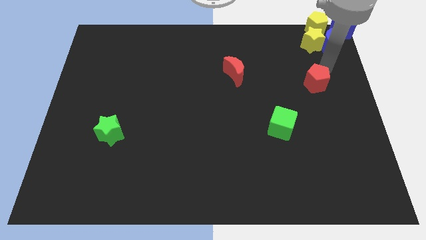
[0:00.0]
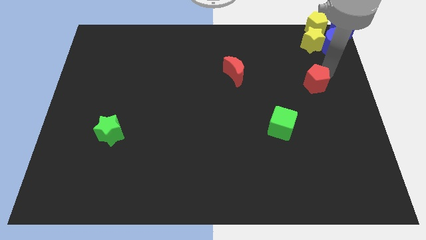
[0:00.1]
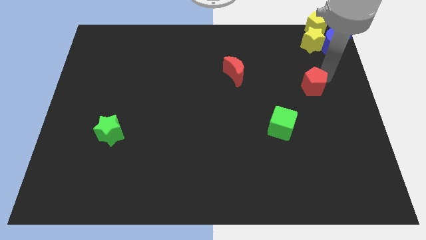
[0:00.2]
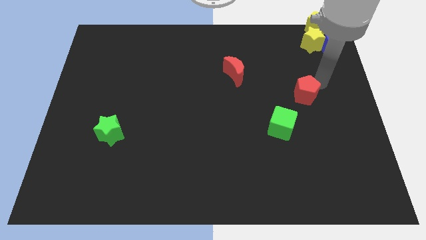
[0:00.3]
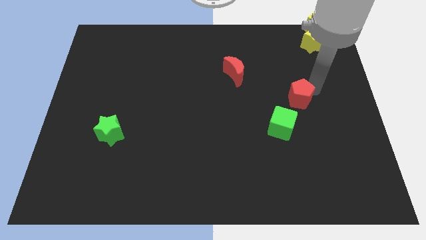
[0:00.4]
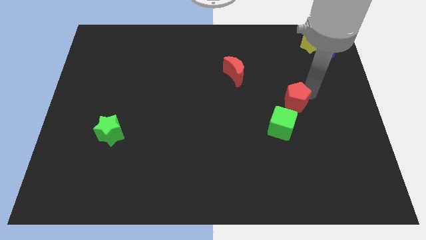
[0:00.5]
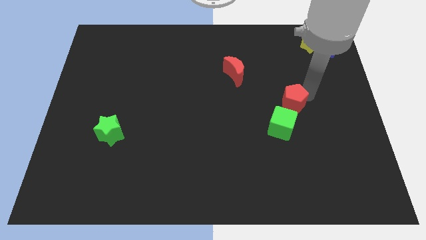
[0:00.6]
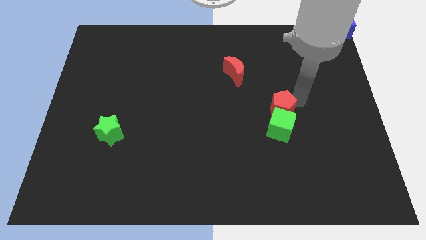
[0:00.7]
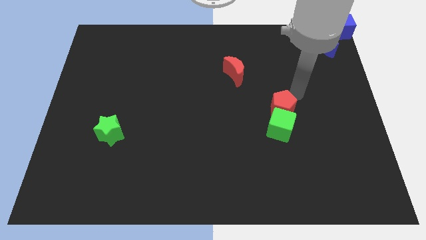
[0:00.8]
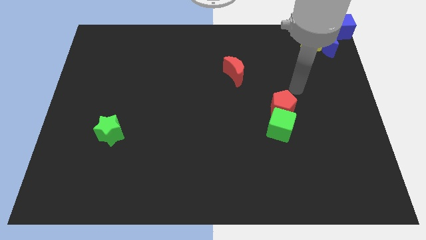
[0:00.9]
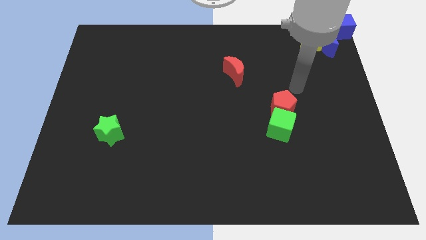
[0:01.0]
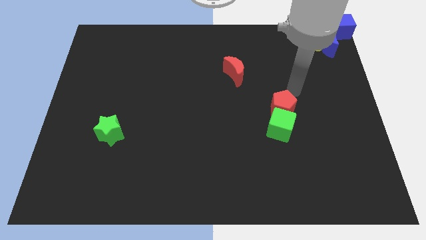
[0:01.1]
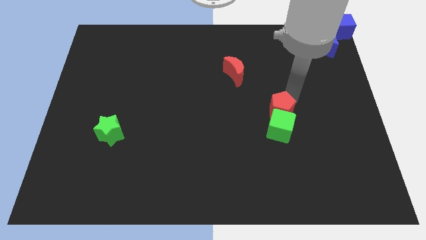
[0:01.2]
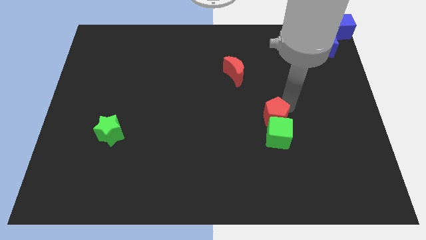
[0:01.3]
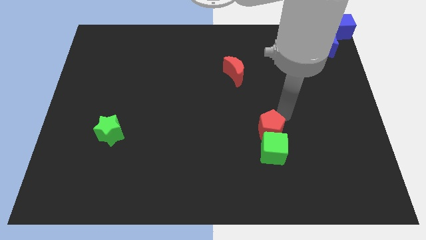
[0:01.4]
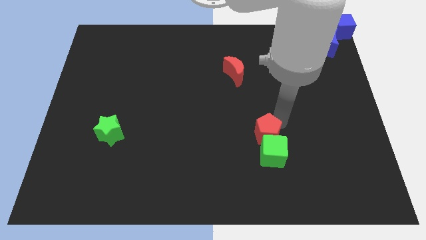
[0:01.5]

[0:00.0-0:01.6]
place the red pentagon into the green cube

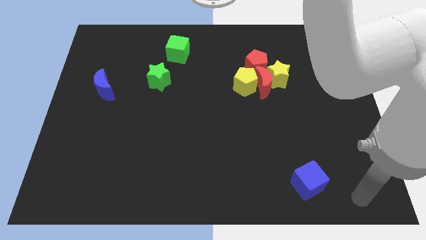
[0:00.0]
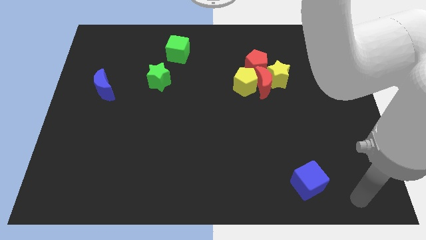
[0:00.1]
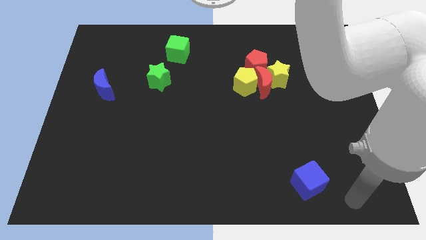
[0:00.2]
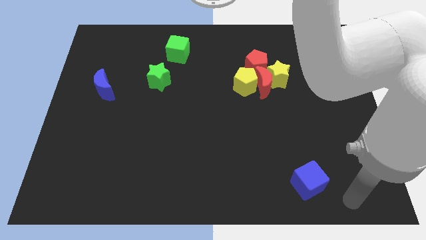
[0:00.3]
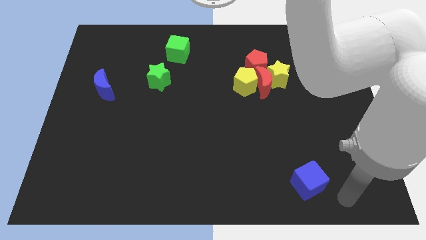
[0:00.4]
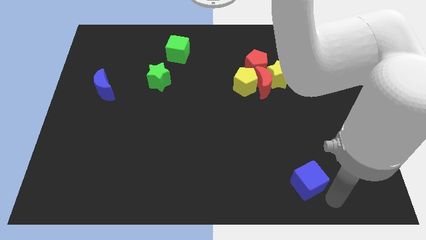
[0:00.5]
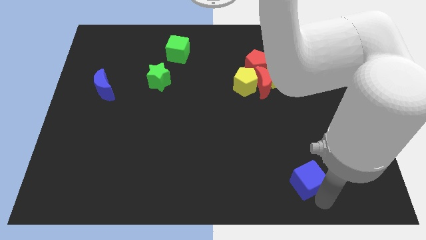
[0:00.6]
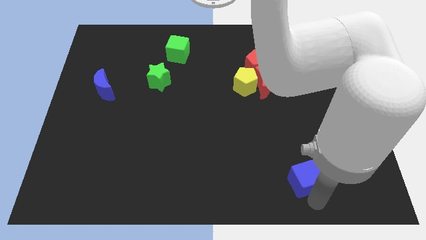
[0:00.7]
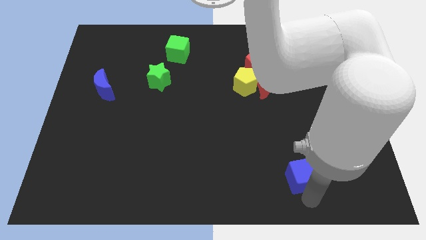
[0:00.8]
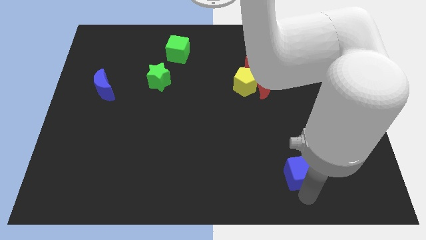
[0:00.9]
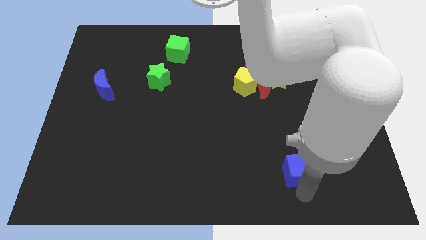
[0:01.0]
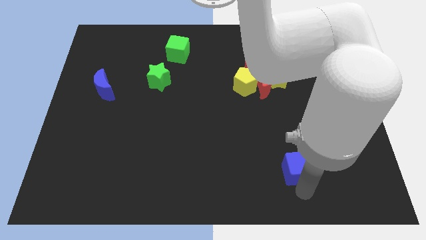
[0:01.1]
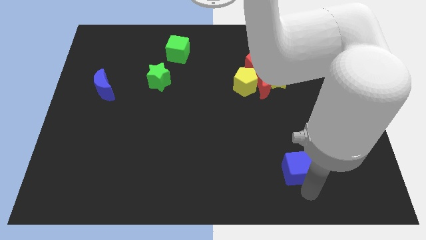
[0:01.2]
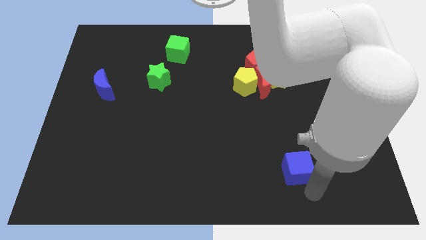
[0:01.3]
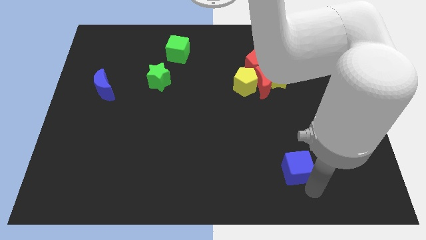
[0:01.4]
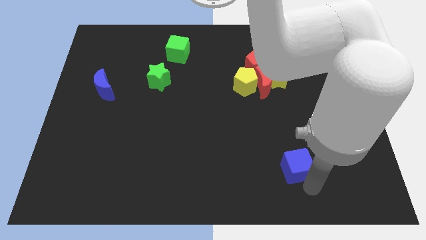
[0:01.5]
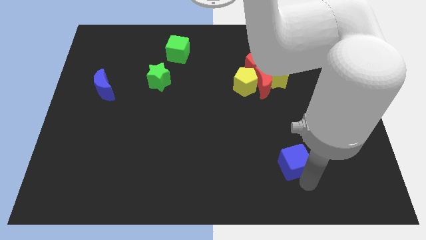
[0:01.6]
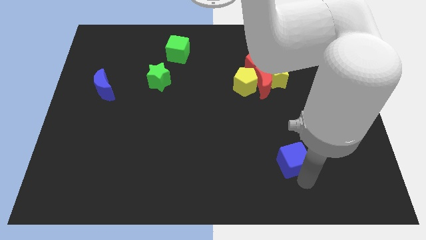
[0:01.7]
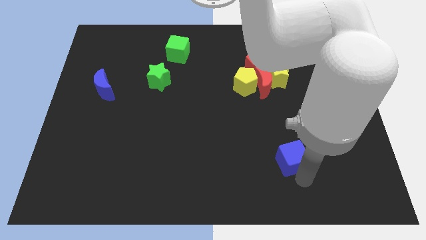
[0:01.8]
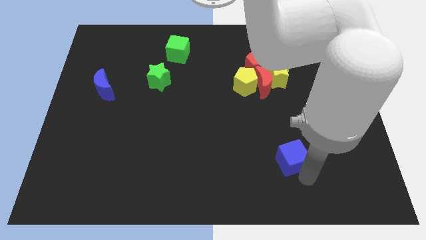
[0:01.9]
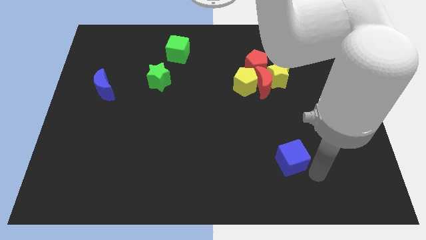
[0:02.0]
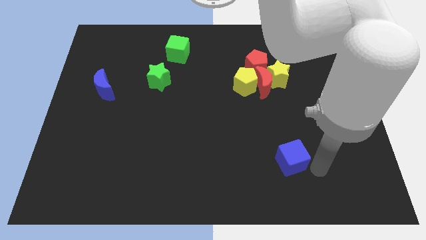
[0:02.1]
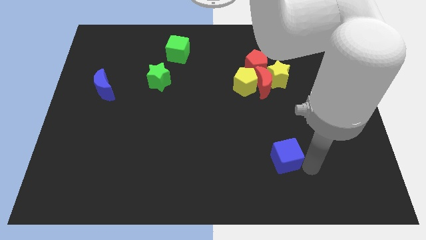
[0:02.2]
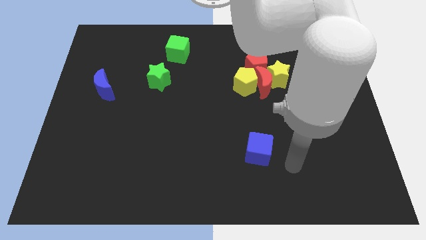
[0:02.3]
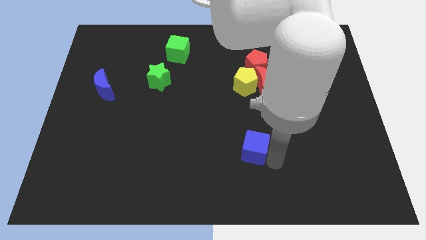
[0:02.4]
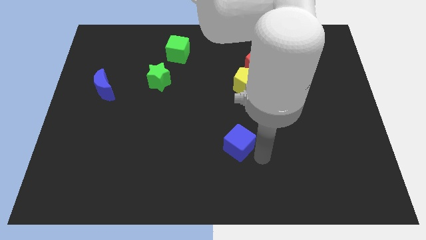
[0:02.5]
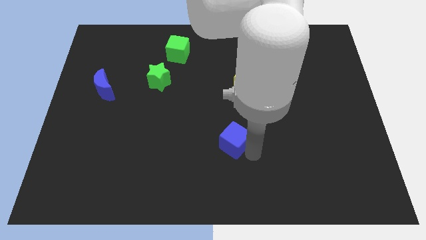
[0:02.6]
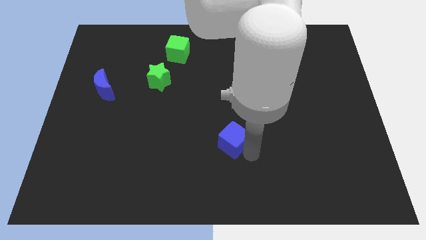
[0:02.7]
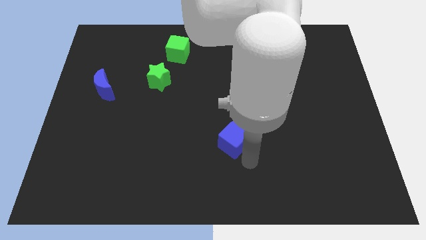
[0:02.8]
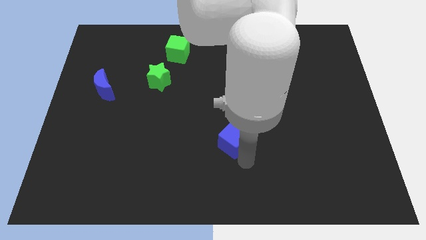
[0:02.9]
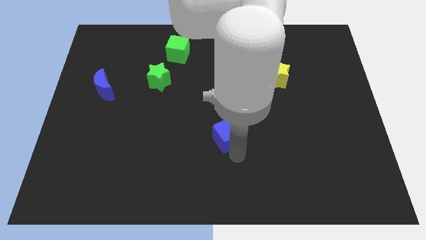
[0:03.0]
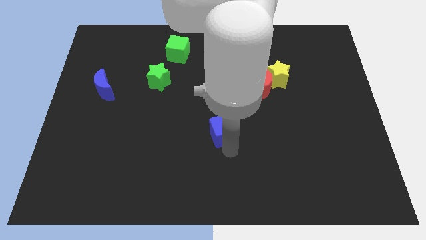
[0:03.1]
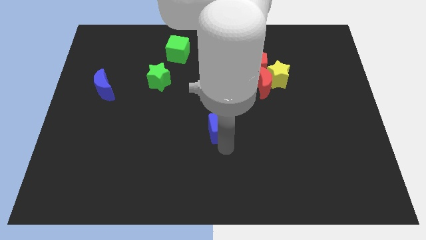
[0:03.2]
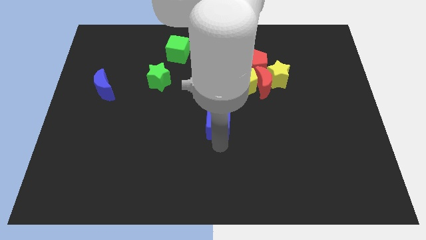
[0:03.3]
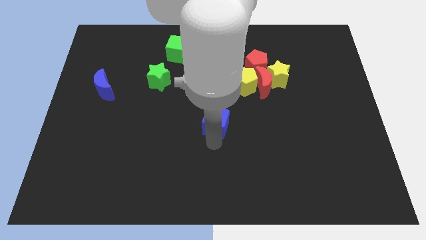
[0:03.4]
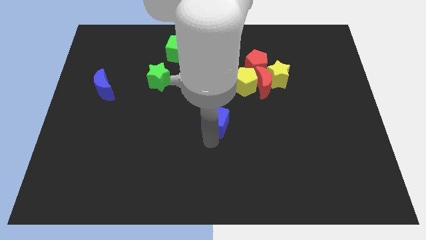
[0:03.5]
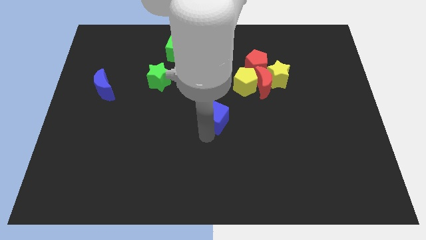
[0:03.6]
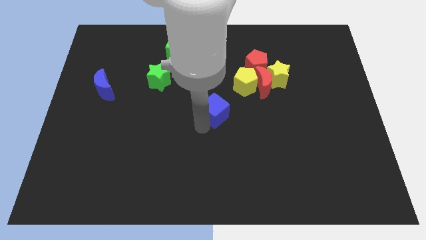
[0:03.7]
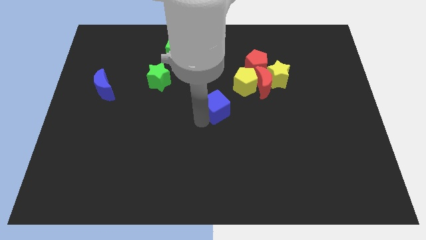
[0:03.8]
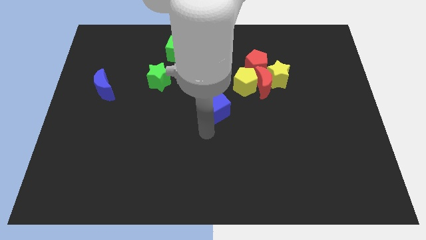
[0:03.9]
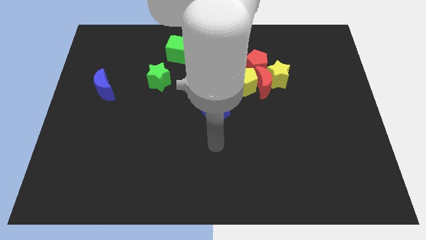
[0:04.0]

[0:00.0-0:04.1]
push the blue cube towards the center of the board

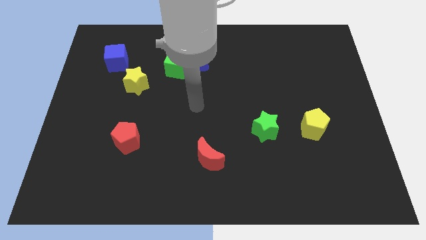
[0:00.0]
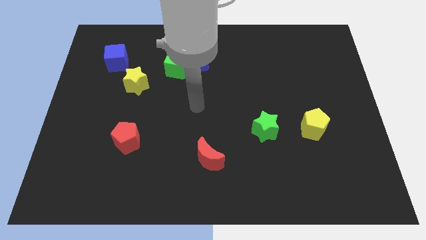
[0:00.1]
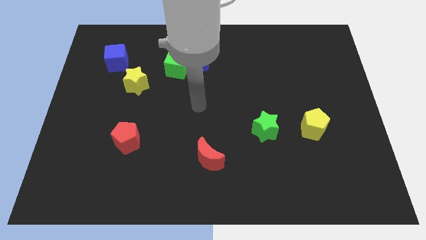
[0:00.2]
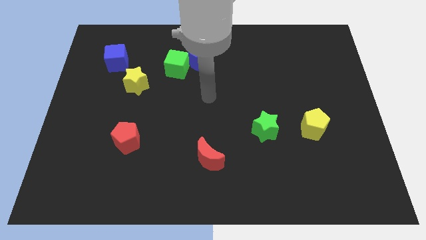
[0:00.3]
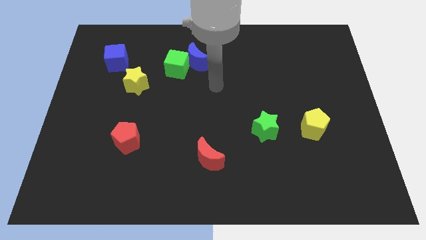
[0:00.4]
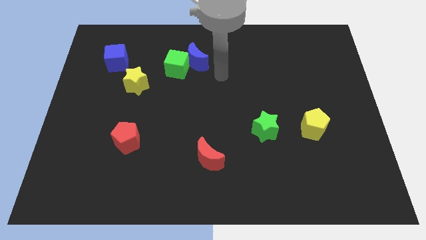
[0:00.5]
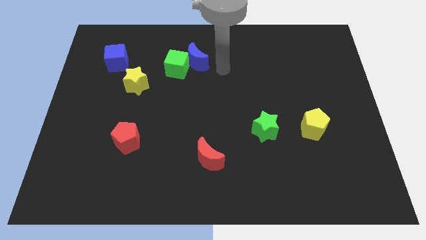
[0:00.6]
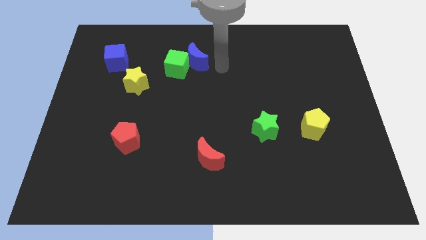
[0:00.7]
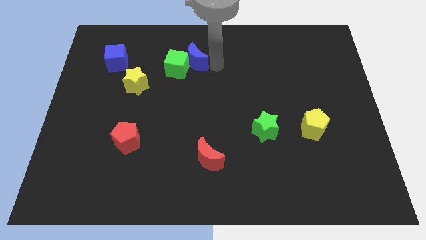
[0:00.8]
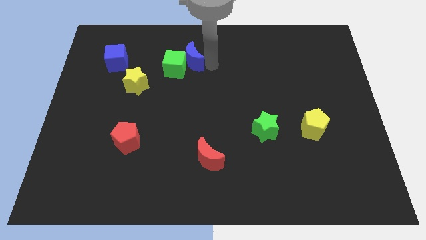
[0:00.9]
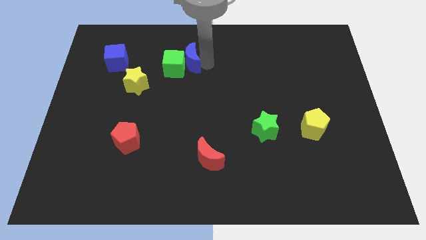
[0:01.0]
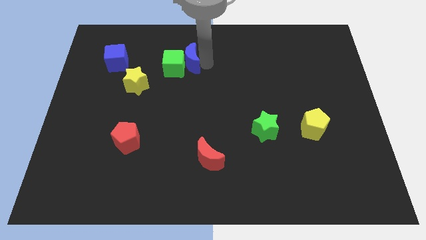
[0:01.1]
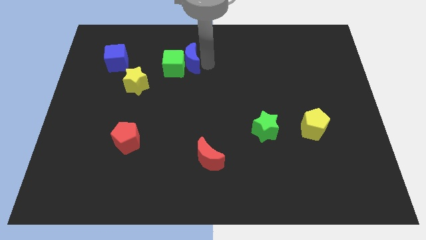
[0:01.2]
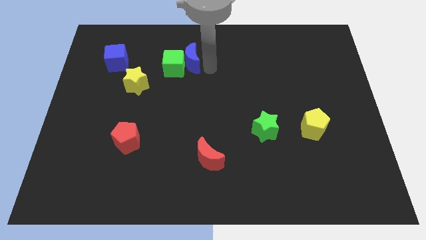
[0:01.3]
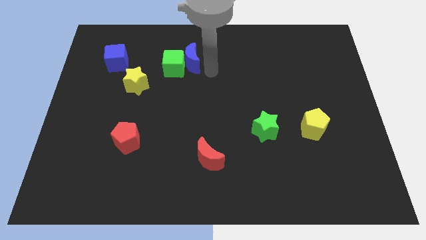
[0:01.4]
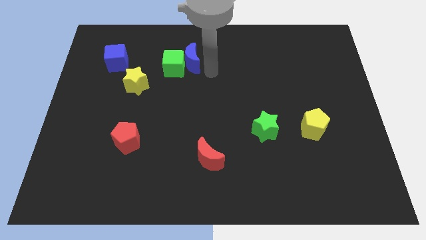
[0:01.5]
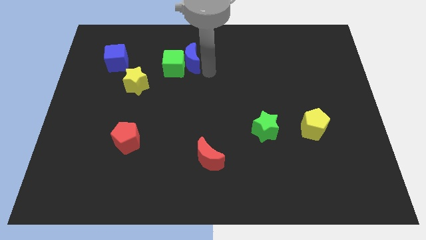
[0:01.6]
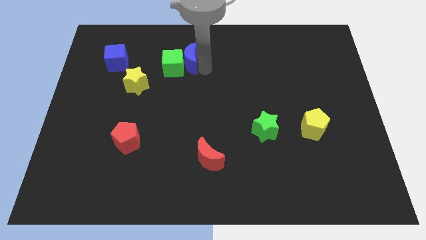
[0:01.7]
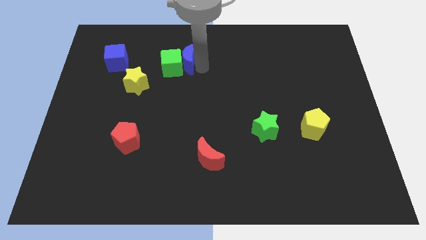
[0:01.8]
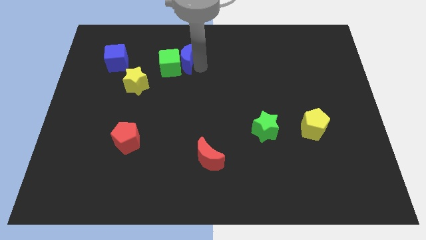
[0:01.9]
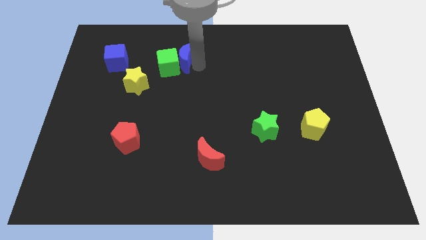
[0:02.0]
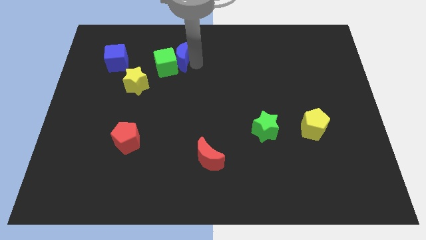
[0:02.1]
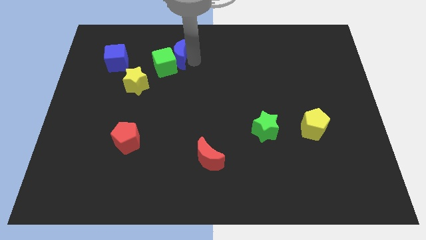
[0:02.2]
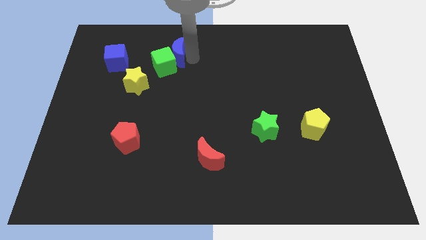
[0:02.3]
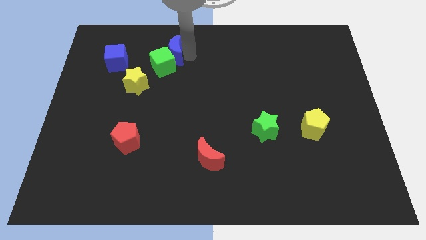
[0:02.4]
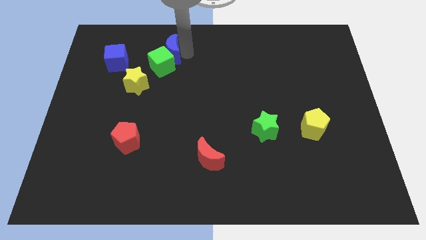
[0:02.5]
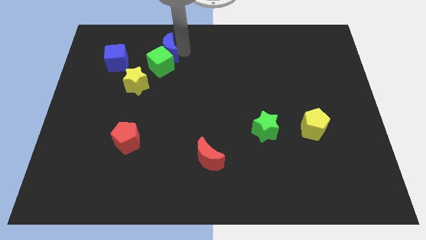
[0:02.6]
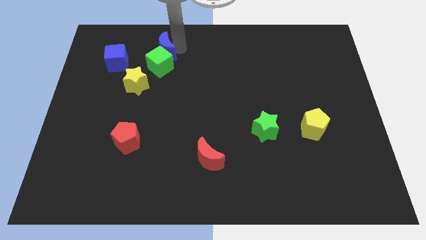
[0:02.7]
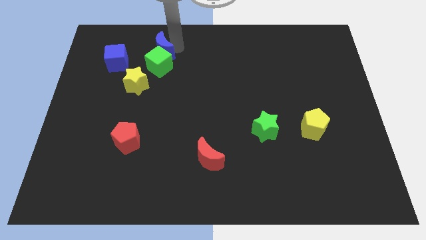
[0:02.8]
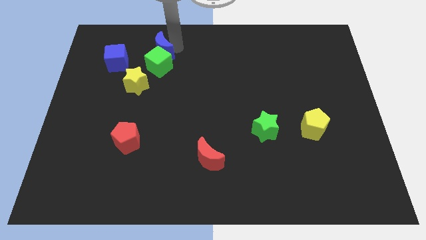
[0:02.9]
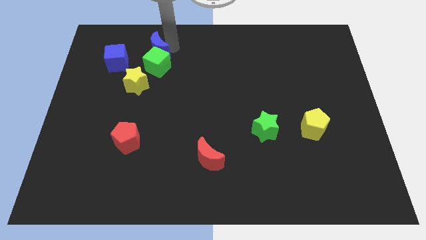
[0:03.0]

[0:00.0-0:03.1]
slightly move the blue moon towards the left

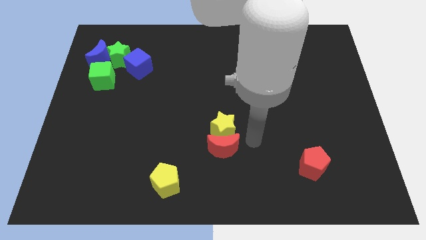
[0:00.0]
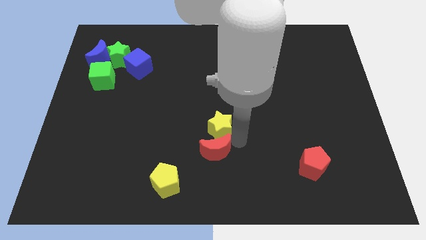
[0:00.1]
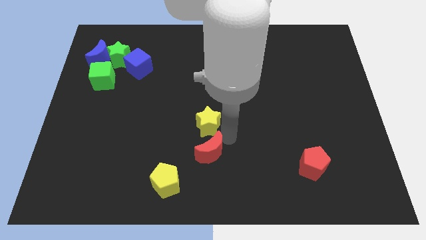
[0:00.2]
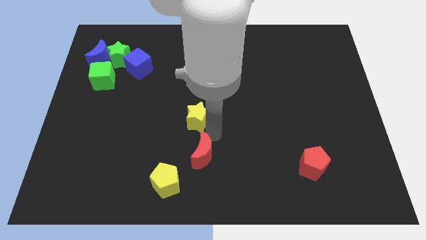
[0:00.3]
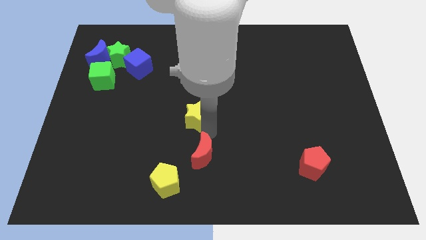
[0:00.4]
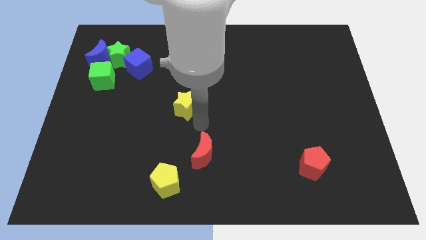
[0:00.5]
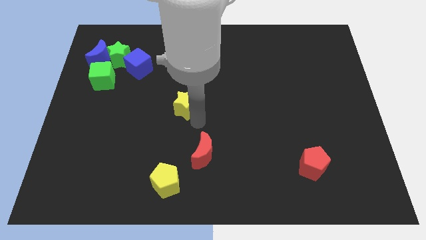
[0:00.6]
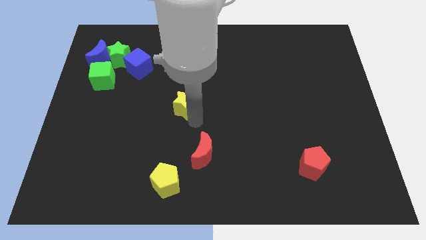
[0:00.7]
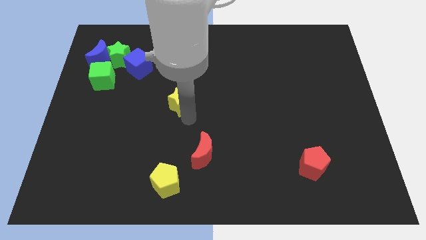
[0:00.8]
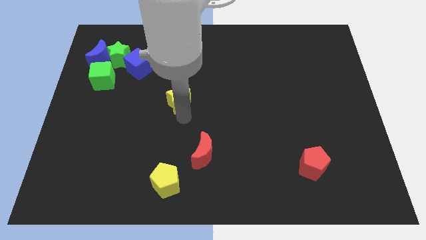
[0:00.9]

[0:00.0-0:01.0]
separate the yellow star and red moon
